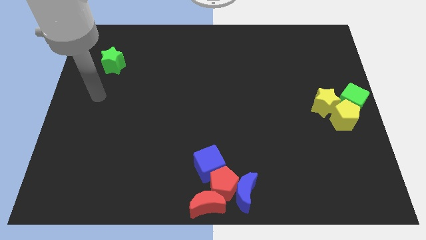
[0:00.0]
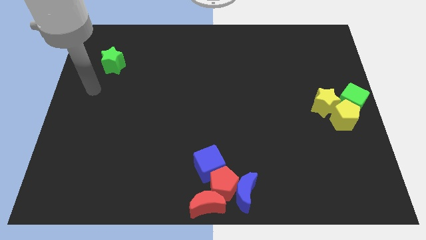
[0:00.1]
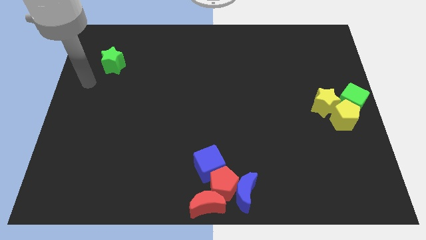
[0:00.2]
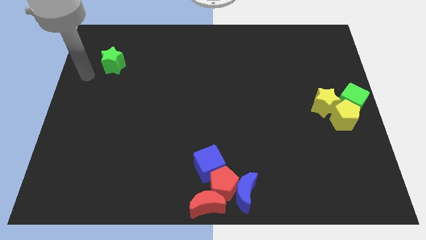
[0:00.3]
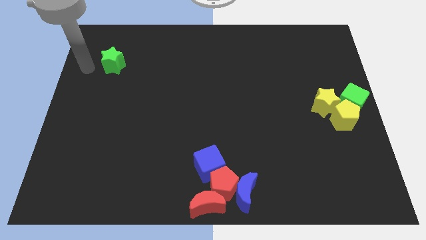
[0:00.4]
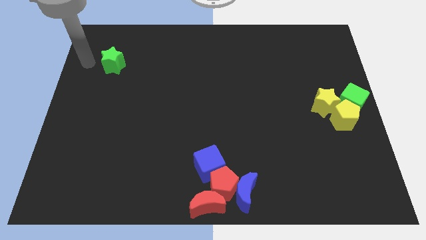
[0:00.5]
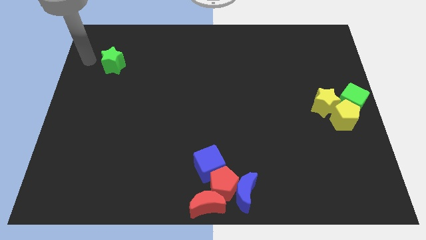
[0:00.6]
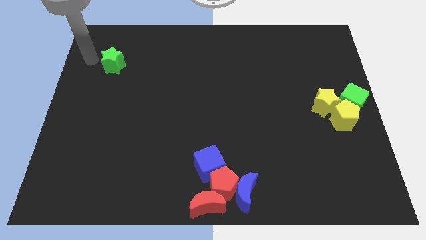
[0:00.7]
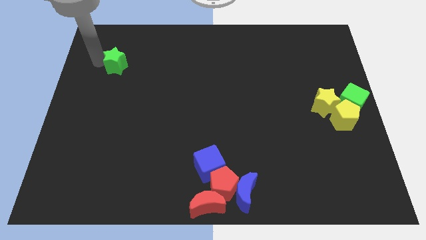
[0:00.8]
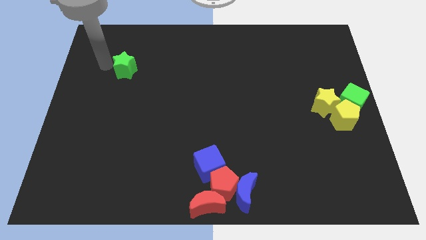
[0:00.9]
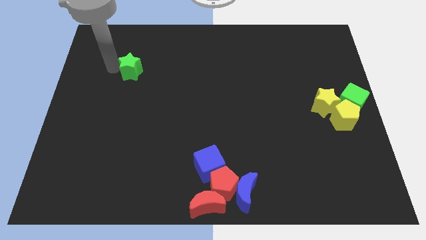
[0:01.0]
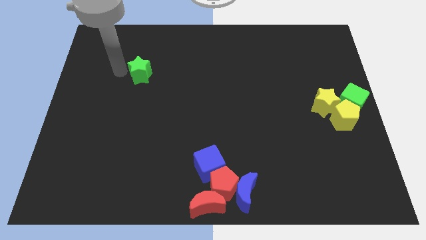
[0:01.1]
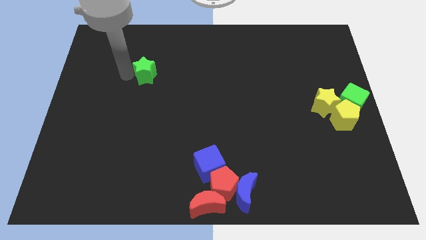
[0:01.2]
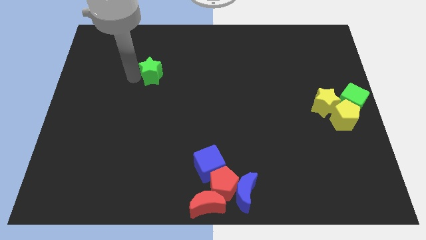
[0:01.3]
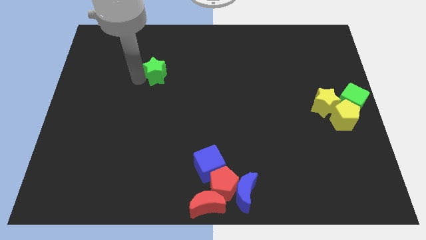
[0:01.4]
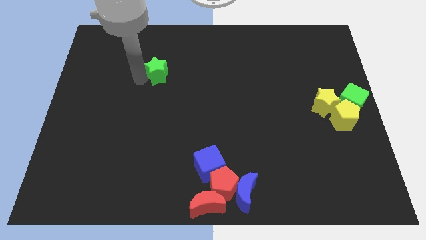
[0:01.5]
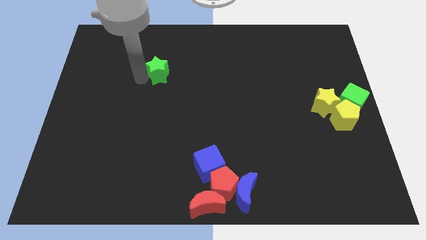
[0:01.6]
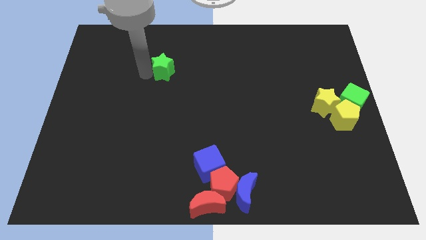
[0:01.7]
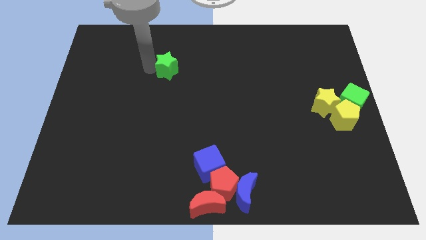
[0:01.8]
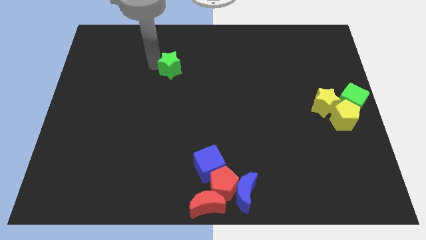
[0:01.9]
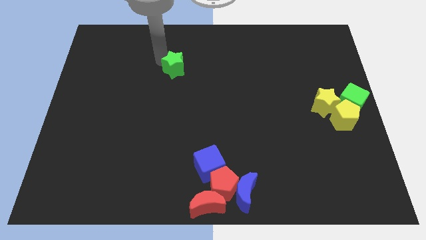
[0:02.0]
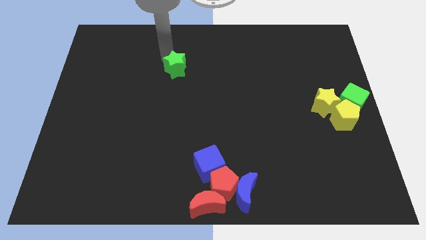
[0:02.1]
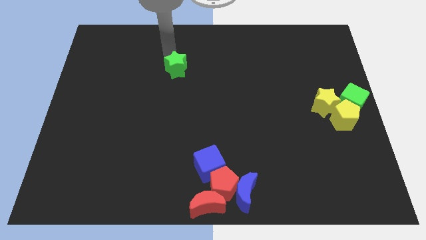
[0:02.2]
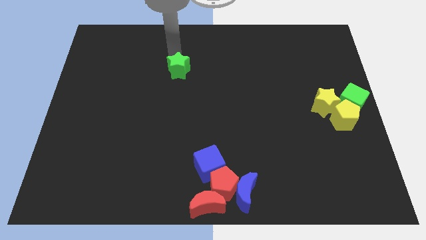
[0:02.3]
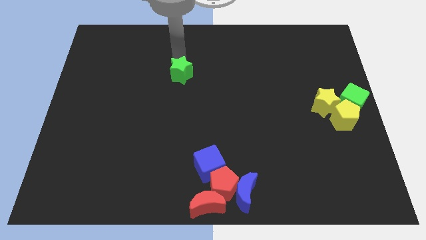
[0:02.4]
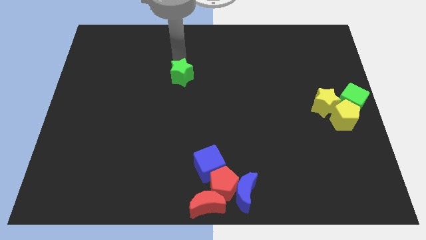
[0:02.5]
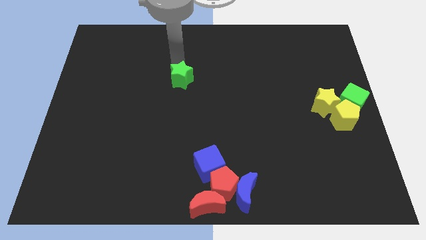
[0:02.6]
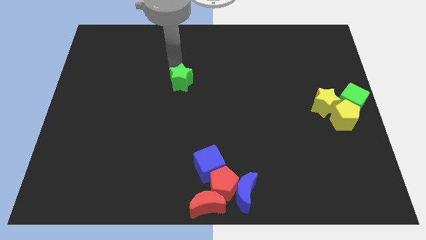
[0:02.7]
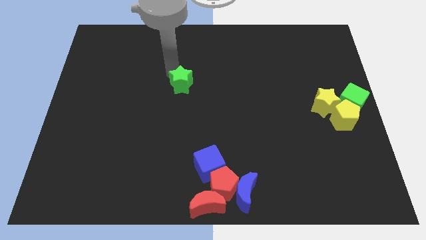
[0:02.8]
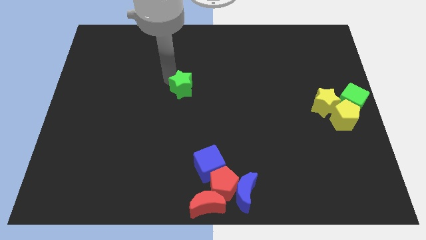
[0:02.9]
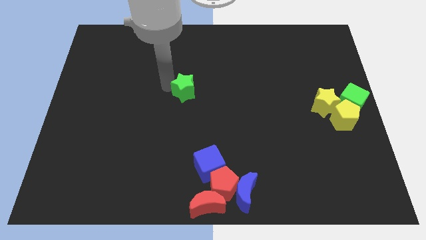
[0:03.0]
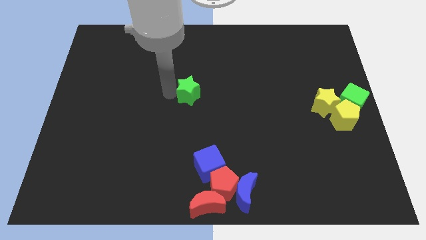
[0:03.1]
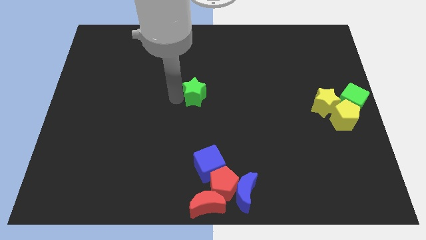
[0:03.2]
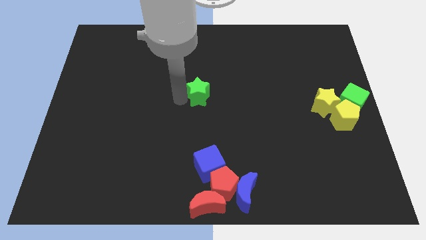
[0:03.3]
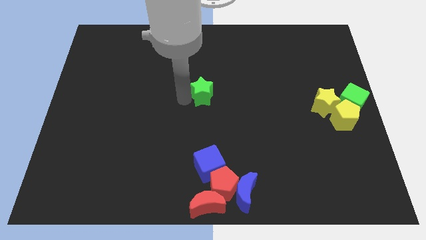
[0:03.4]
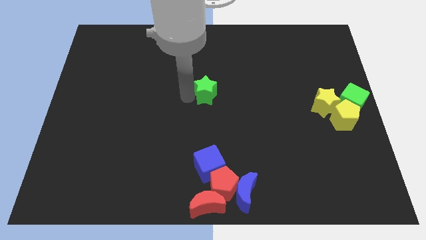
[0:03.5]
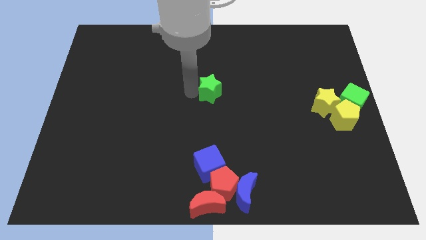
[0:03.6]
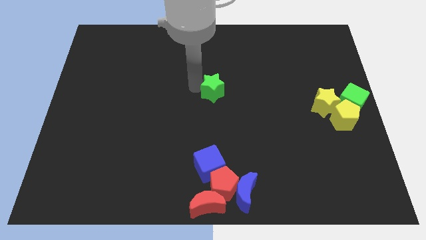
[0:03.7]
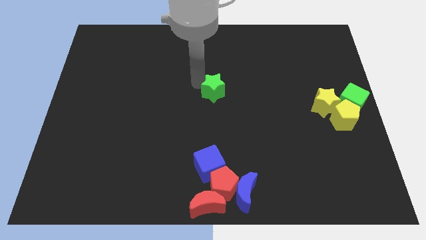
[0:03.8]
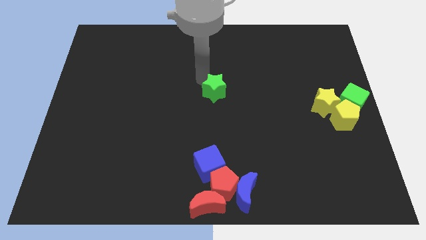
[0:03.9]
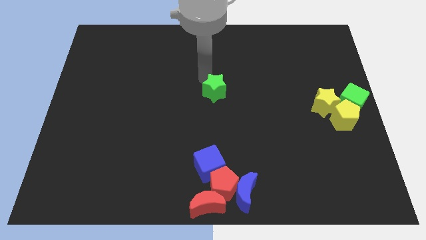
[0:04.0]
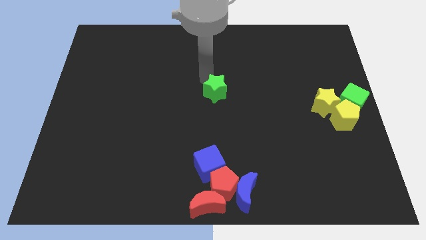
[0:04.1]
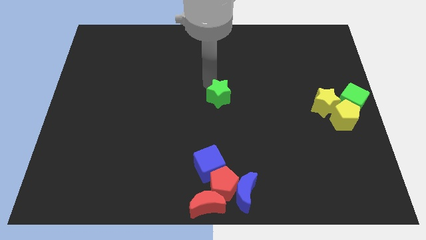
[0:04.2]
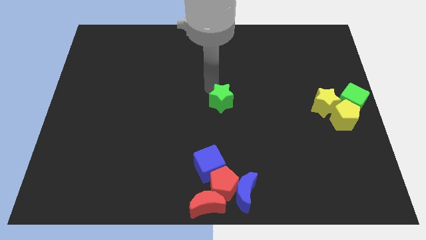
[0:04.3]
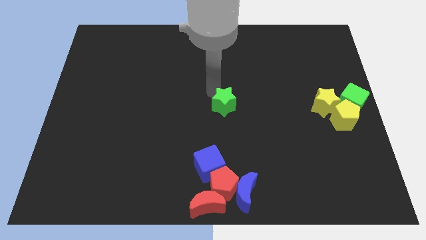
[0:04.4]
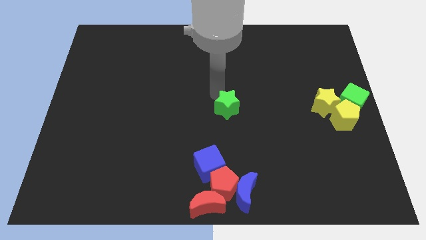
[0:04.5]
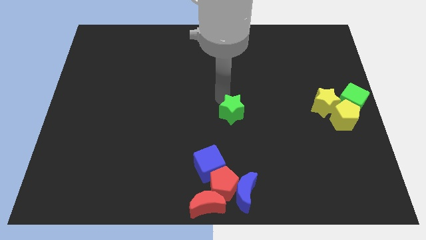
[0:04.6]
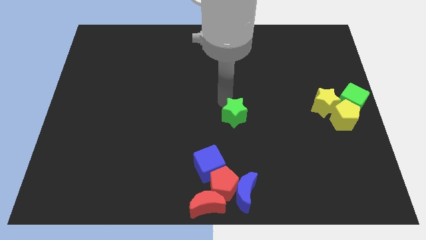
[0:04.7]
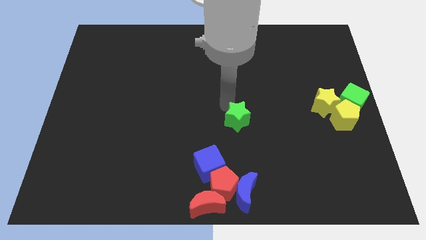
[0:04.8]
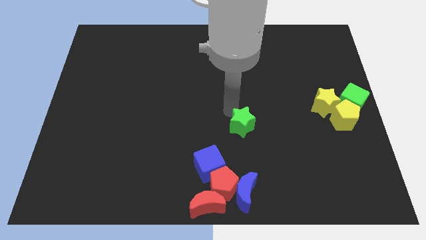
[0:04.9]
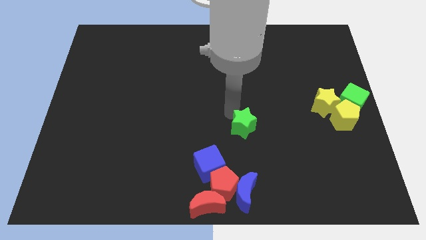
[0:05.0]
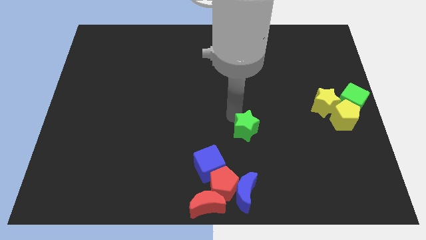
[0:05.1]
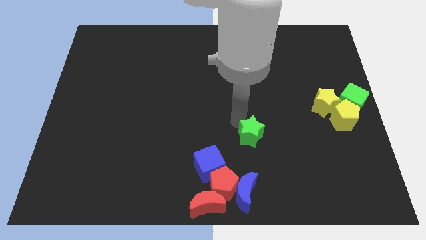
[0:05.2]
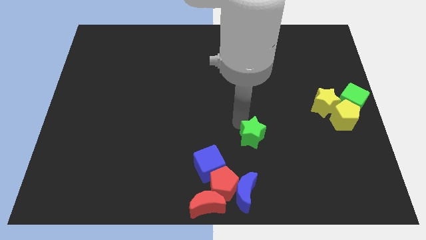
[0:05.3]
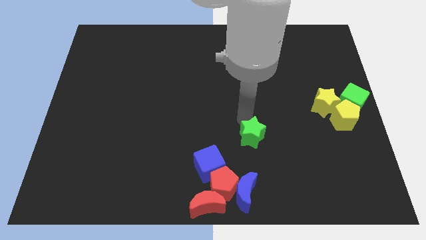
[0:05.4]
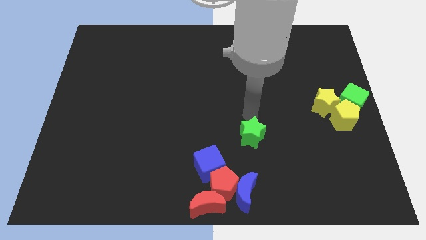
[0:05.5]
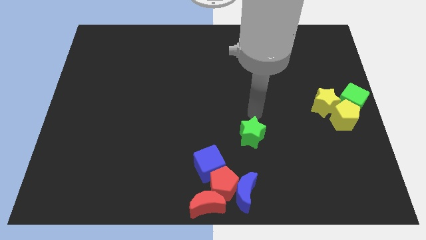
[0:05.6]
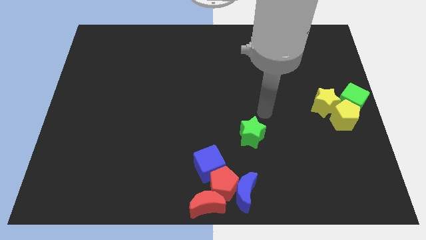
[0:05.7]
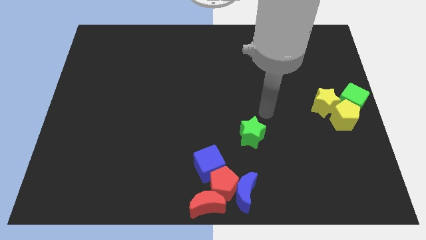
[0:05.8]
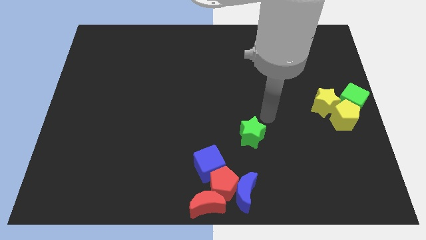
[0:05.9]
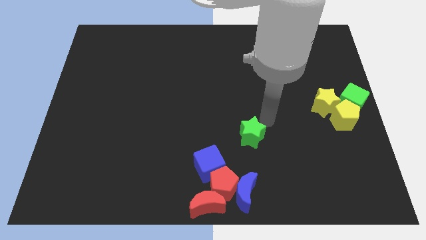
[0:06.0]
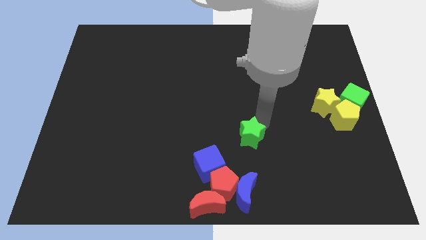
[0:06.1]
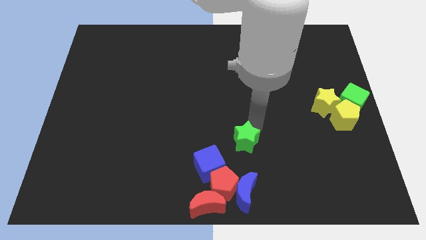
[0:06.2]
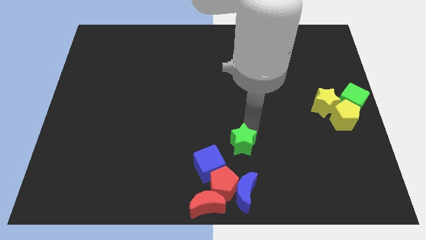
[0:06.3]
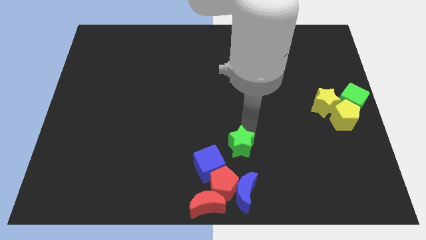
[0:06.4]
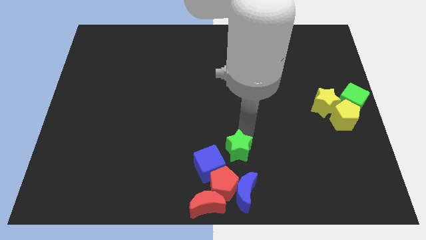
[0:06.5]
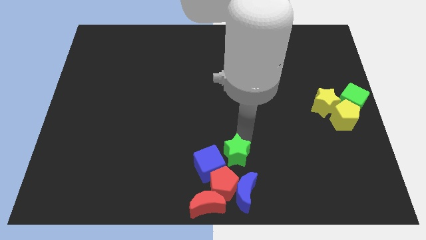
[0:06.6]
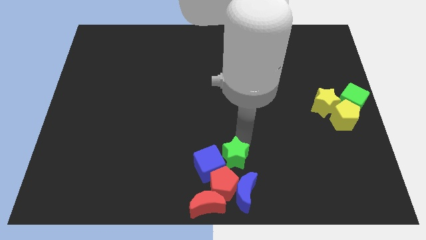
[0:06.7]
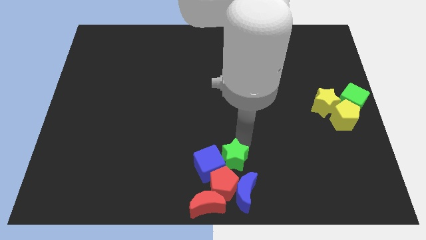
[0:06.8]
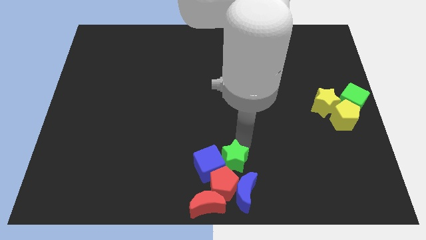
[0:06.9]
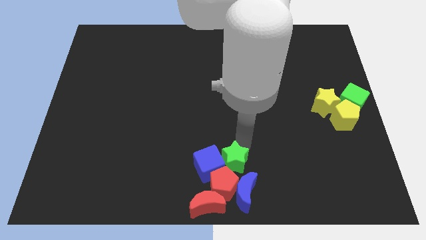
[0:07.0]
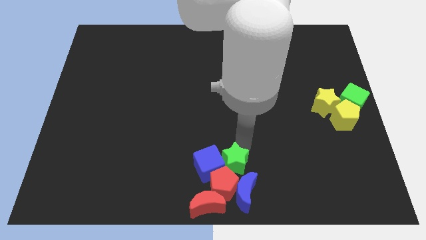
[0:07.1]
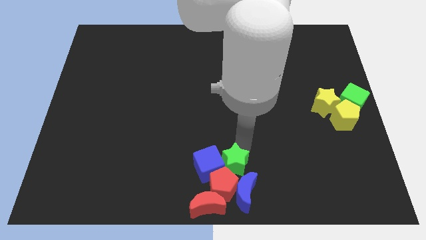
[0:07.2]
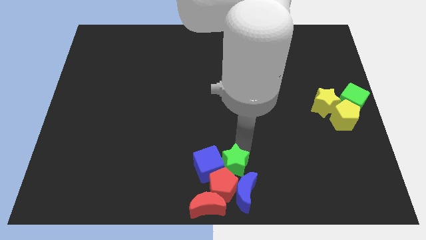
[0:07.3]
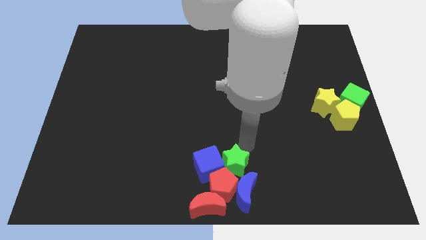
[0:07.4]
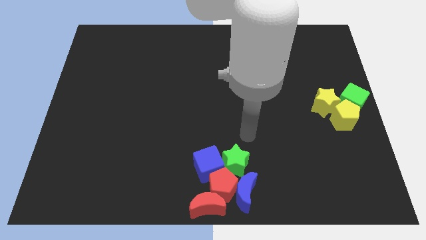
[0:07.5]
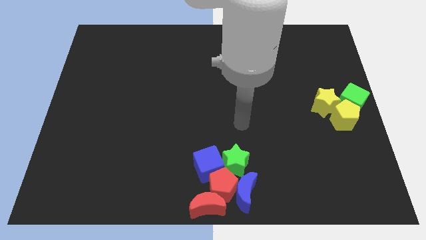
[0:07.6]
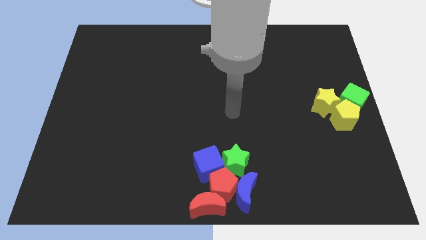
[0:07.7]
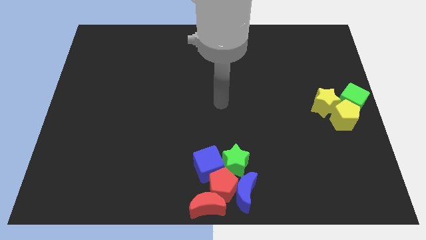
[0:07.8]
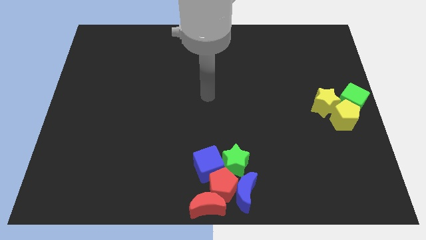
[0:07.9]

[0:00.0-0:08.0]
push the green star towards the bottom center of the board

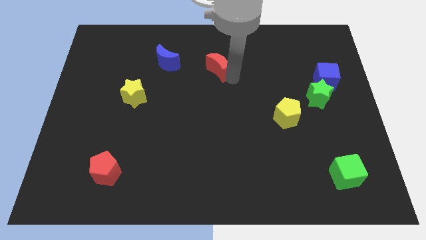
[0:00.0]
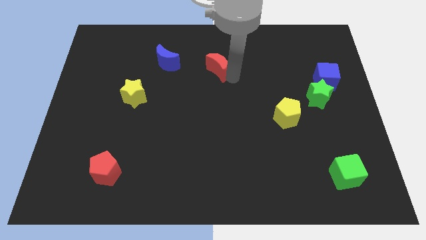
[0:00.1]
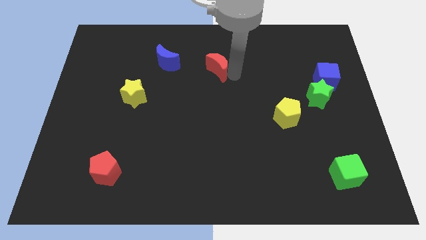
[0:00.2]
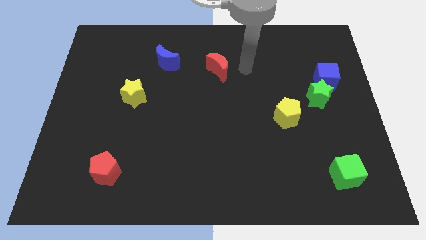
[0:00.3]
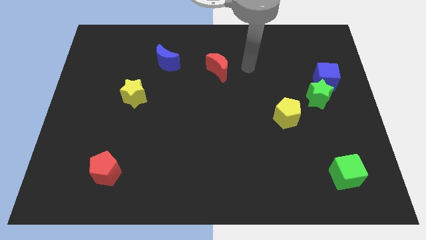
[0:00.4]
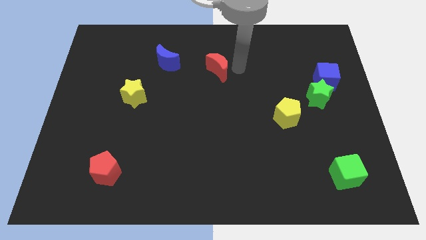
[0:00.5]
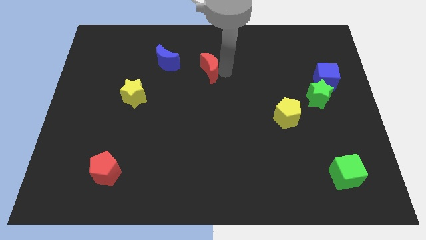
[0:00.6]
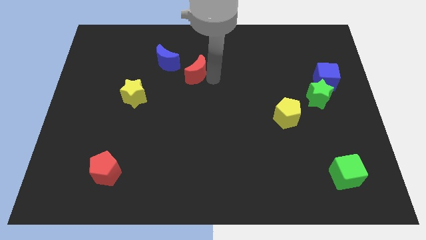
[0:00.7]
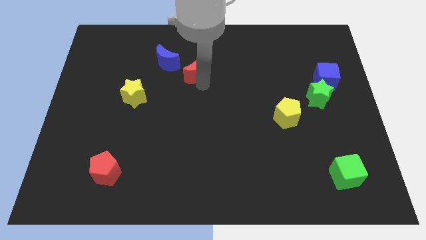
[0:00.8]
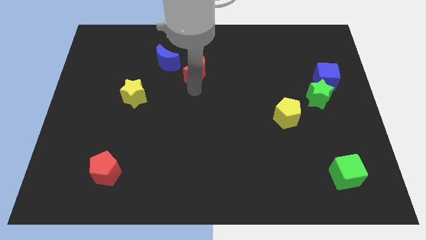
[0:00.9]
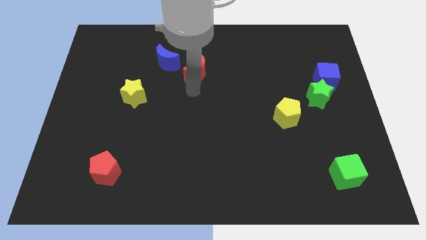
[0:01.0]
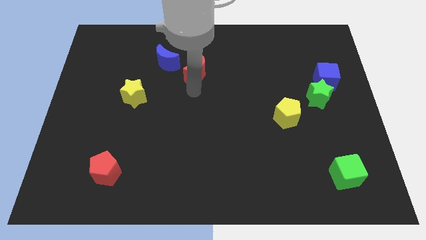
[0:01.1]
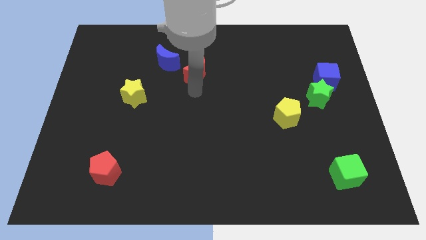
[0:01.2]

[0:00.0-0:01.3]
push the red moon diagonally top right to yellow star
